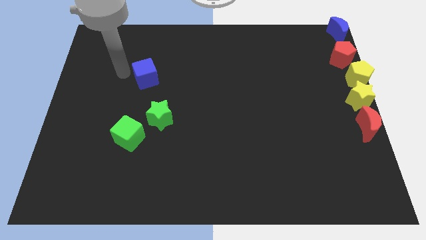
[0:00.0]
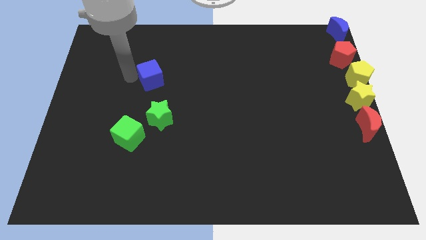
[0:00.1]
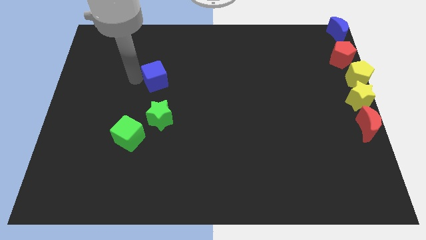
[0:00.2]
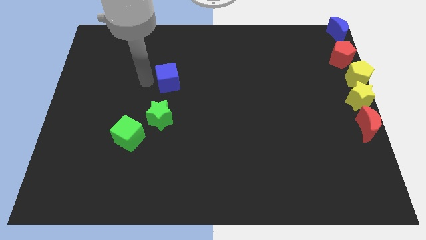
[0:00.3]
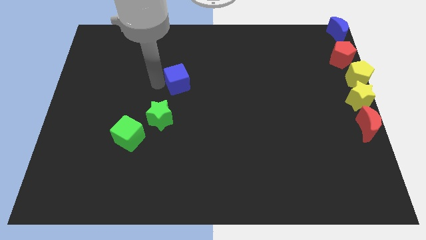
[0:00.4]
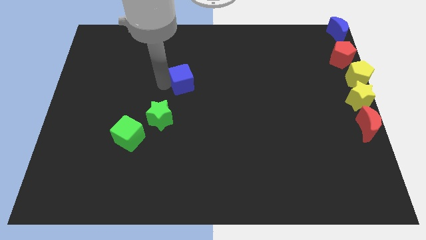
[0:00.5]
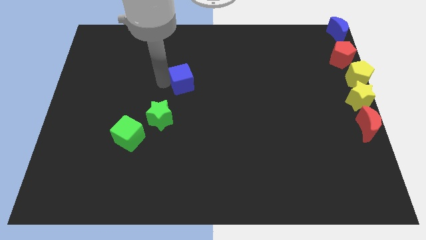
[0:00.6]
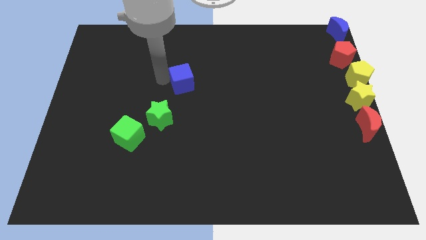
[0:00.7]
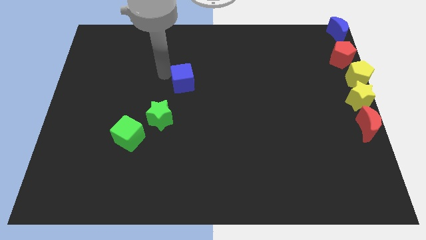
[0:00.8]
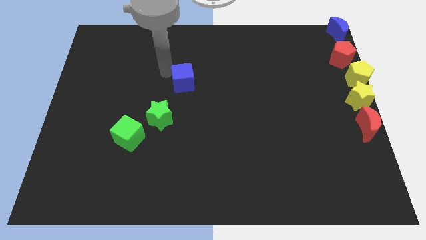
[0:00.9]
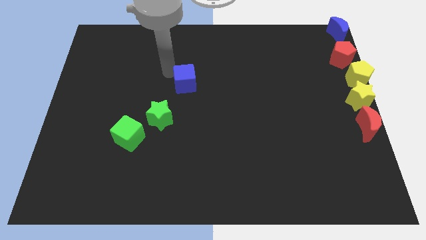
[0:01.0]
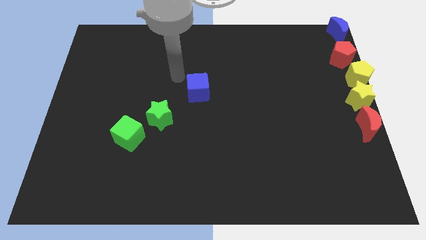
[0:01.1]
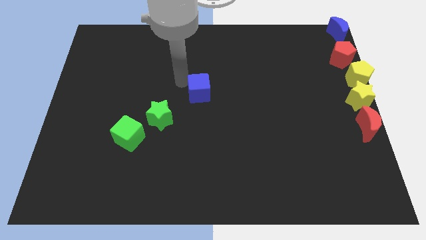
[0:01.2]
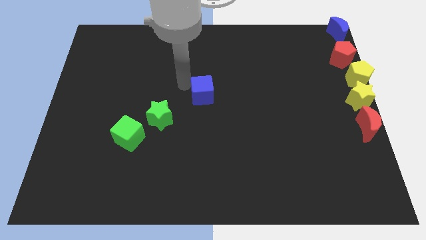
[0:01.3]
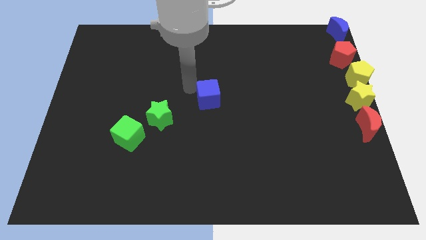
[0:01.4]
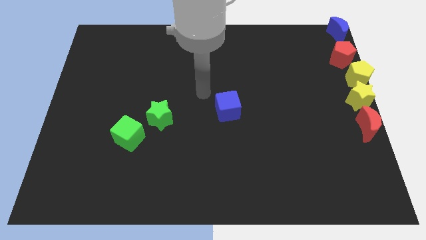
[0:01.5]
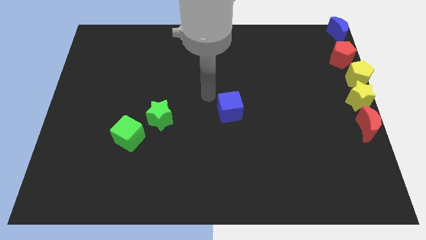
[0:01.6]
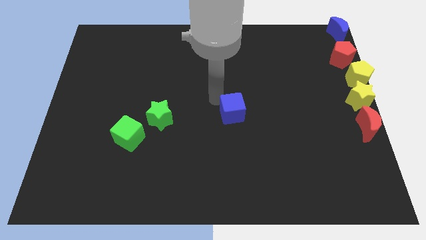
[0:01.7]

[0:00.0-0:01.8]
move the blue cube to the center of the board

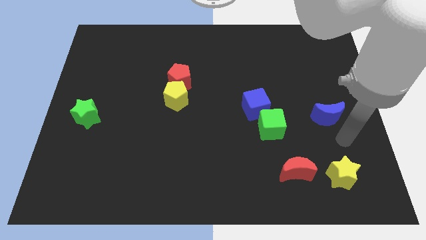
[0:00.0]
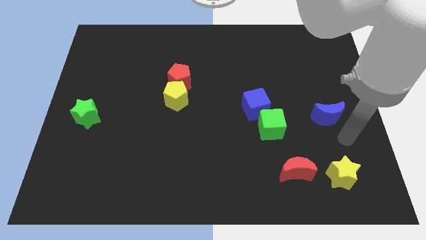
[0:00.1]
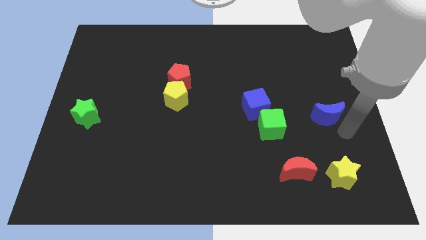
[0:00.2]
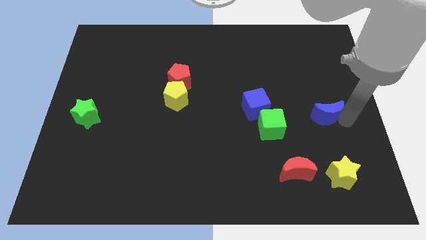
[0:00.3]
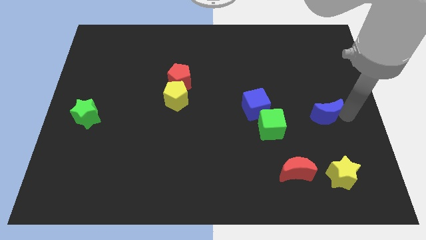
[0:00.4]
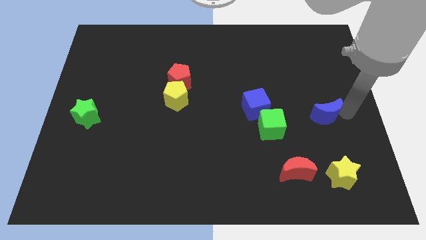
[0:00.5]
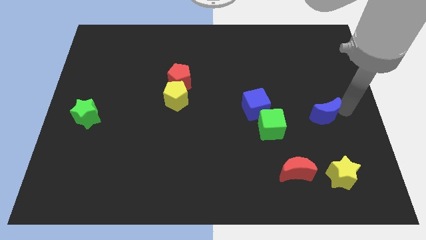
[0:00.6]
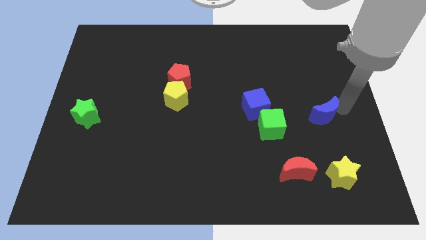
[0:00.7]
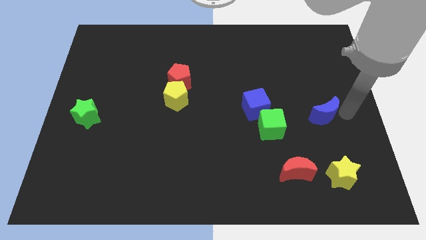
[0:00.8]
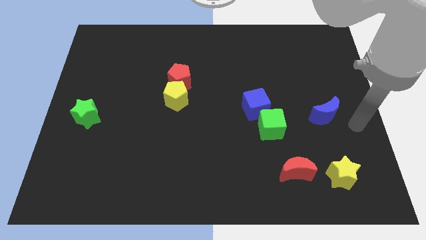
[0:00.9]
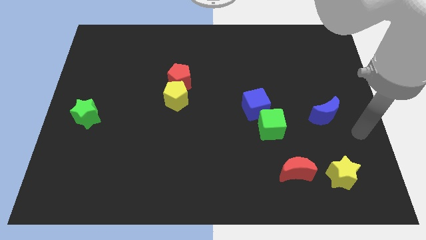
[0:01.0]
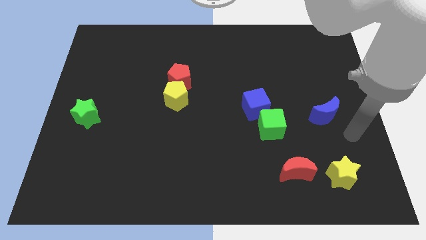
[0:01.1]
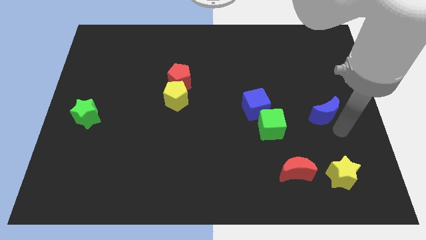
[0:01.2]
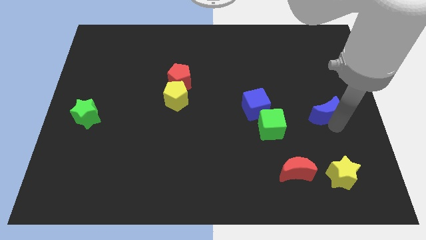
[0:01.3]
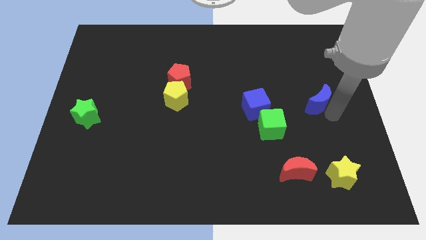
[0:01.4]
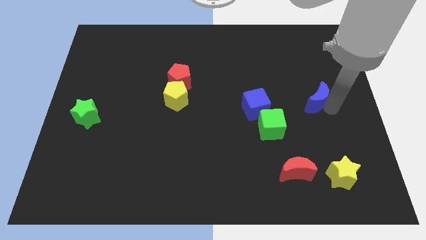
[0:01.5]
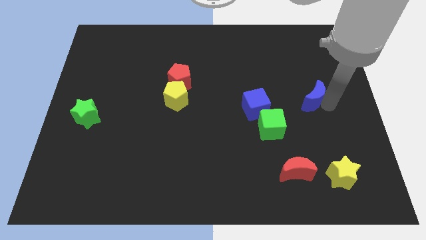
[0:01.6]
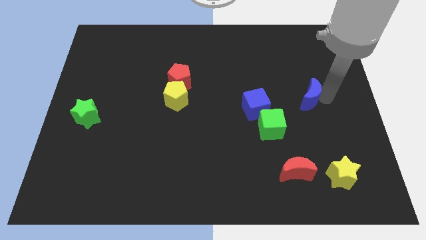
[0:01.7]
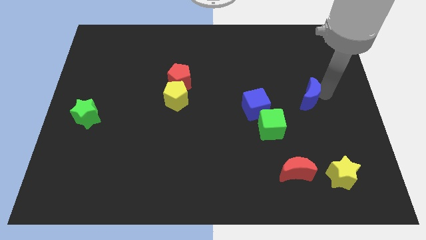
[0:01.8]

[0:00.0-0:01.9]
place the blue moon diagonally on the top right side of the green cube

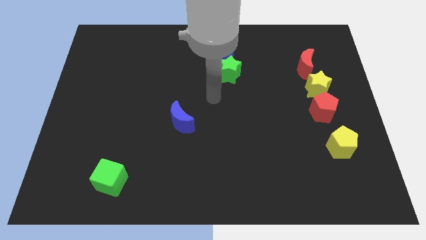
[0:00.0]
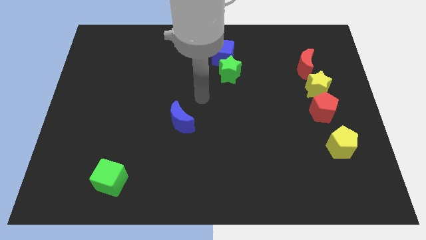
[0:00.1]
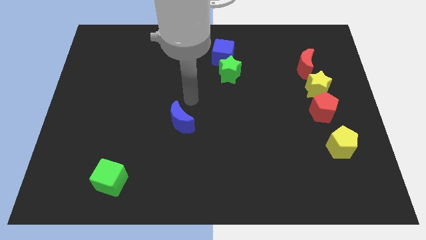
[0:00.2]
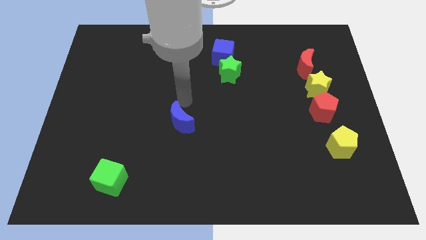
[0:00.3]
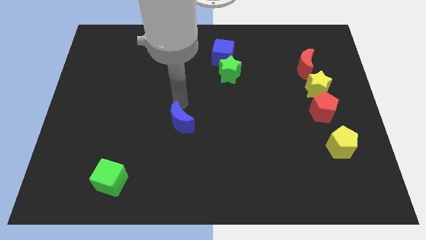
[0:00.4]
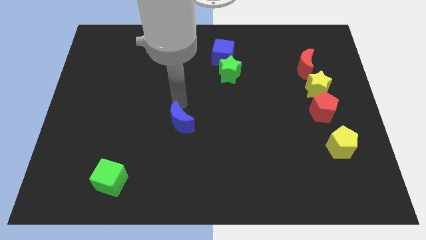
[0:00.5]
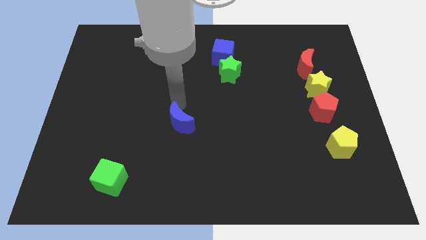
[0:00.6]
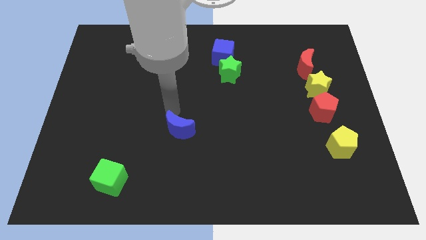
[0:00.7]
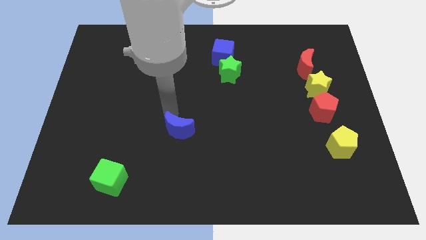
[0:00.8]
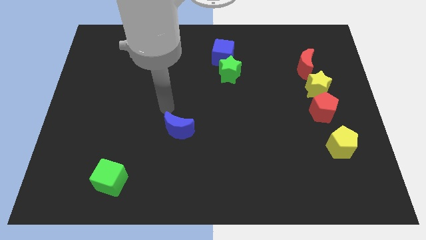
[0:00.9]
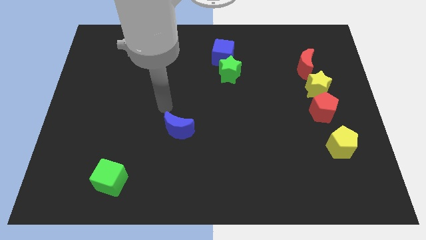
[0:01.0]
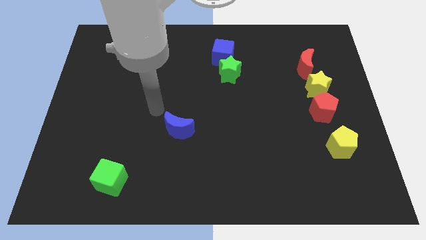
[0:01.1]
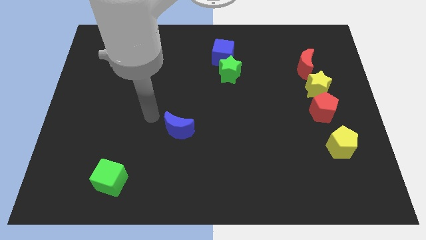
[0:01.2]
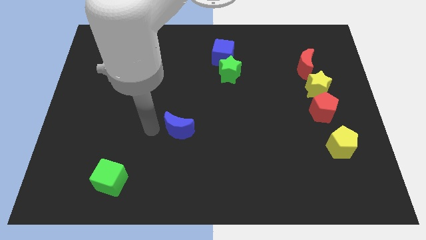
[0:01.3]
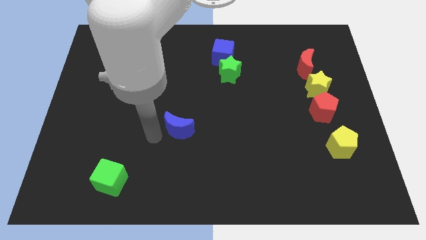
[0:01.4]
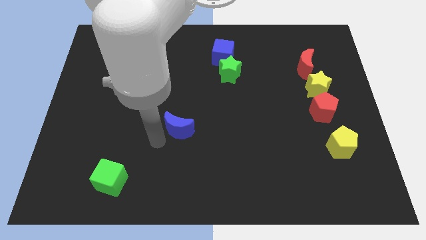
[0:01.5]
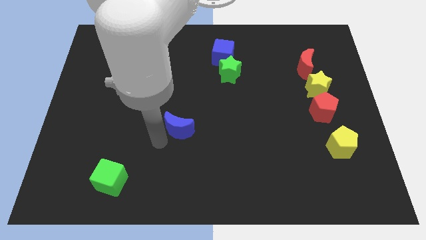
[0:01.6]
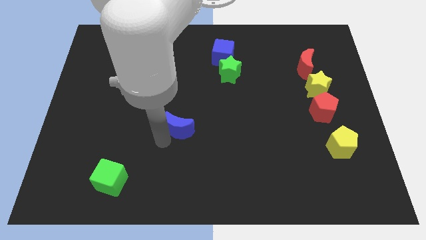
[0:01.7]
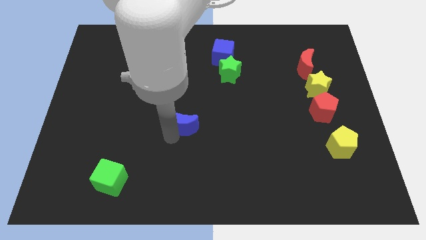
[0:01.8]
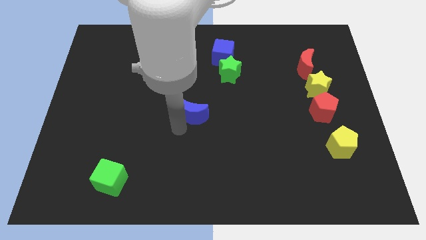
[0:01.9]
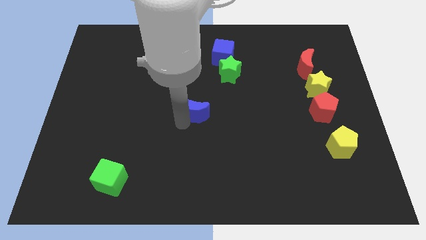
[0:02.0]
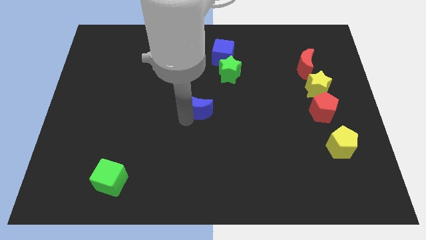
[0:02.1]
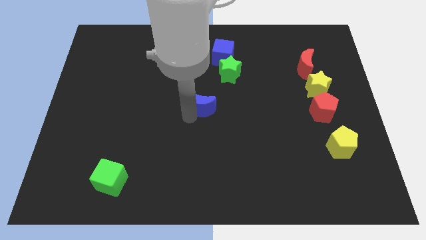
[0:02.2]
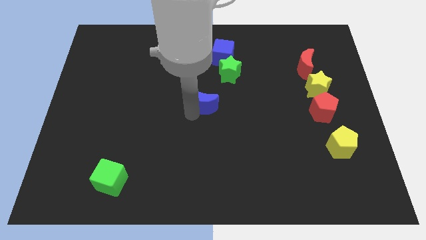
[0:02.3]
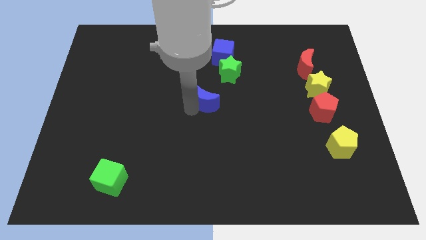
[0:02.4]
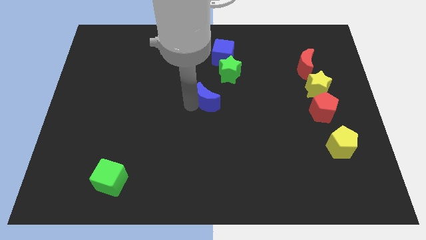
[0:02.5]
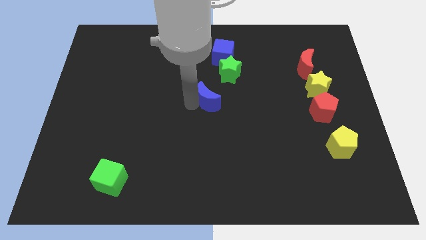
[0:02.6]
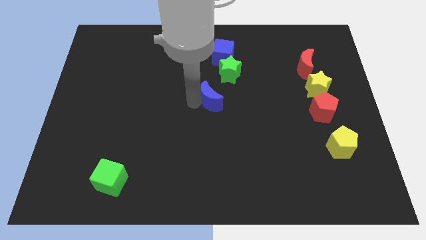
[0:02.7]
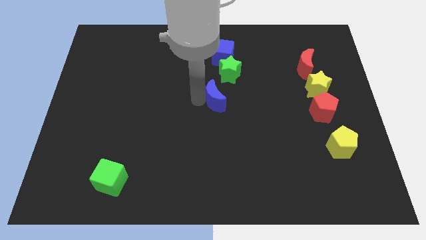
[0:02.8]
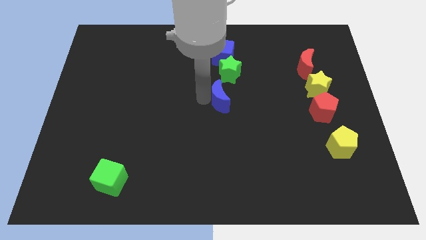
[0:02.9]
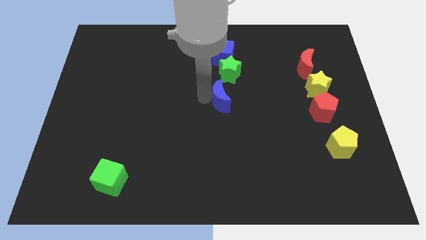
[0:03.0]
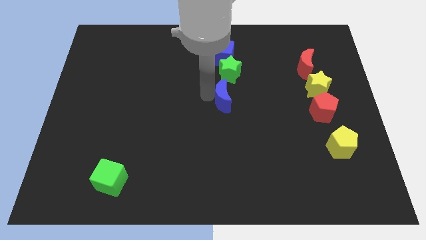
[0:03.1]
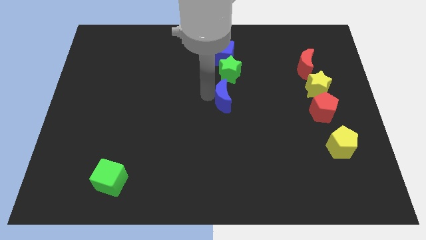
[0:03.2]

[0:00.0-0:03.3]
drag tthe blue moon towards the bottom side of the green star

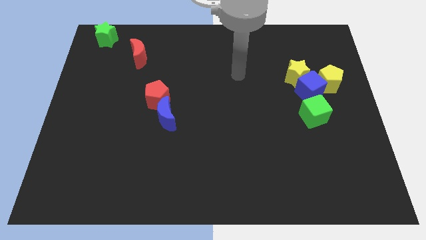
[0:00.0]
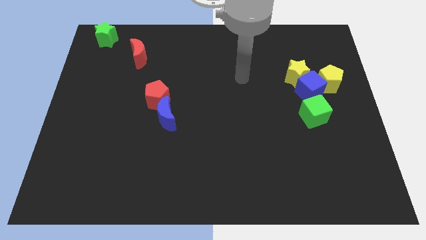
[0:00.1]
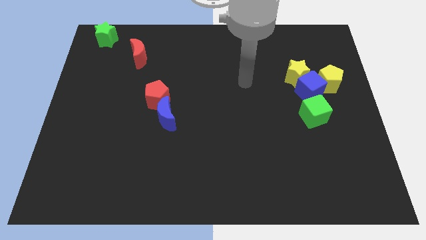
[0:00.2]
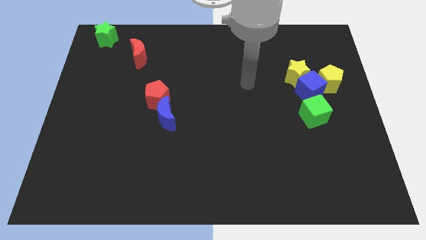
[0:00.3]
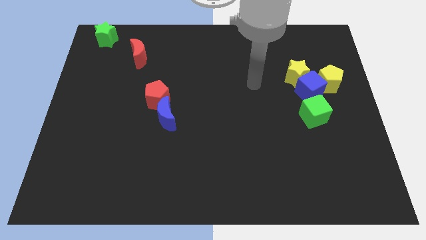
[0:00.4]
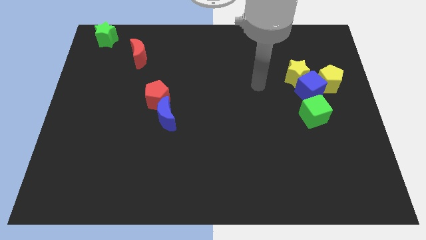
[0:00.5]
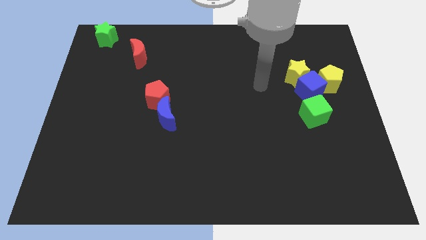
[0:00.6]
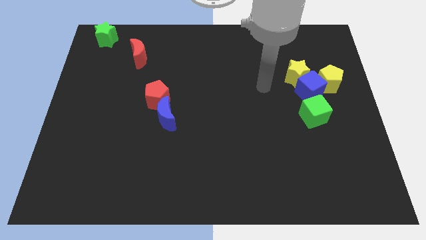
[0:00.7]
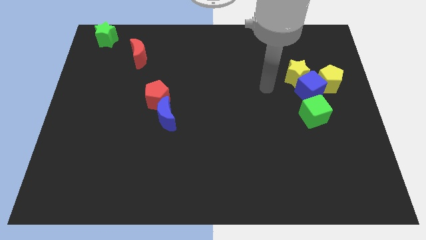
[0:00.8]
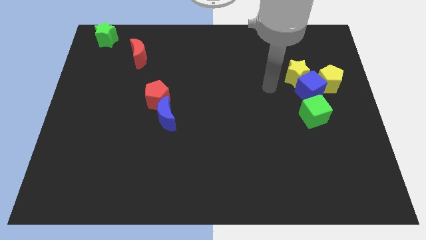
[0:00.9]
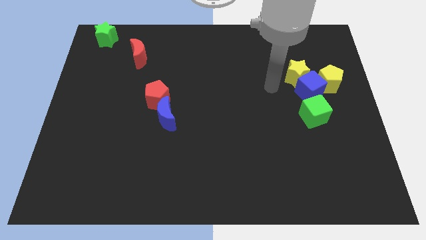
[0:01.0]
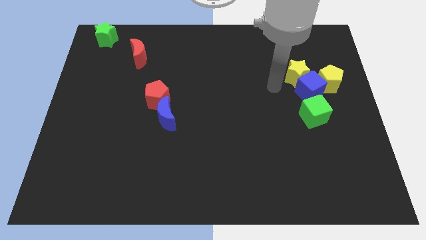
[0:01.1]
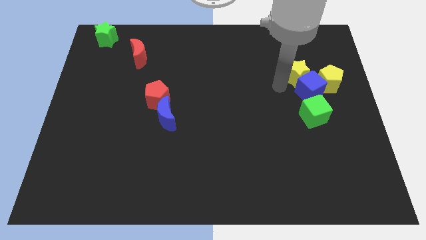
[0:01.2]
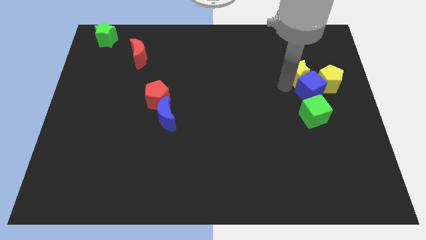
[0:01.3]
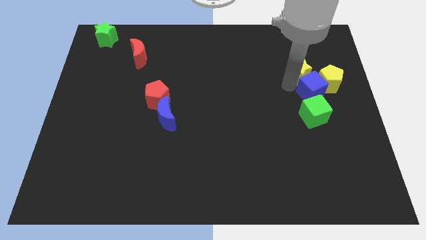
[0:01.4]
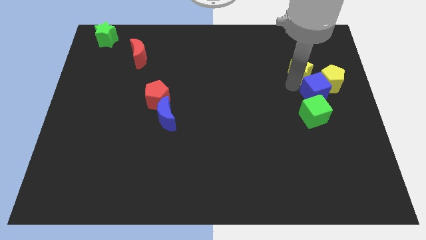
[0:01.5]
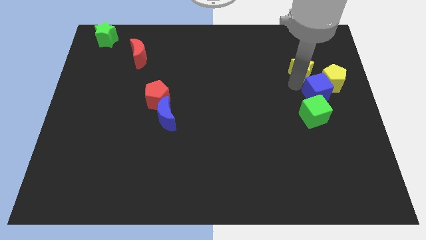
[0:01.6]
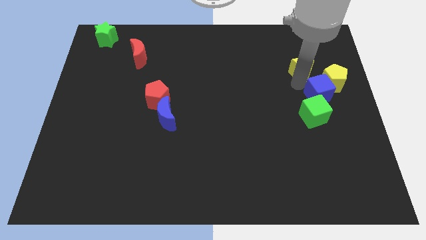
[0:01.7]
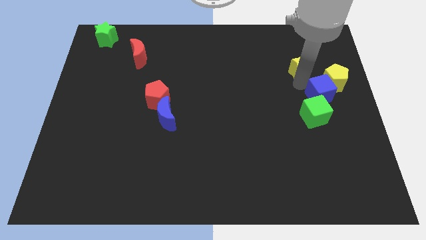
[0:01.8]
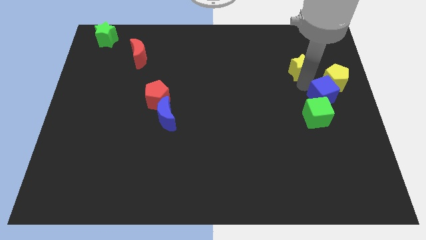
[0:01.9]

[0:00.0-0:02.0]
seperate blue cube and yellow star

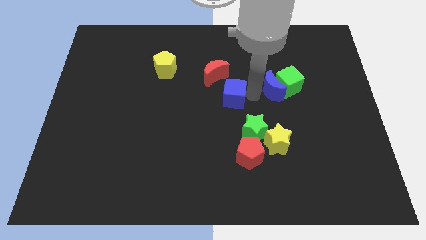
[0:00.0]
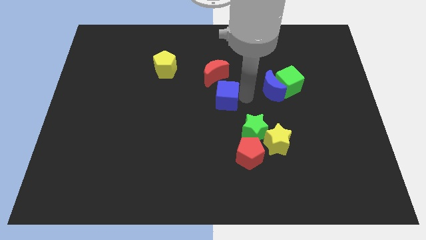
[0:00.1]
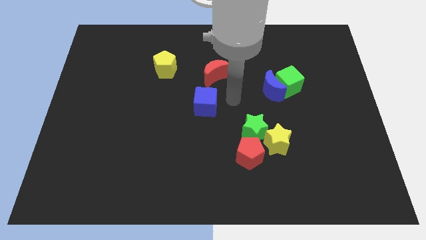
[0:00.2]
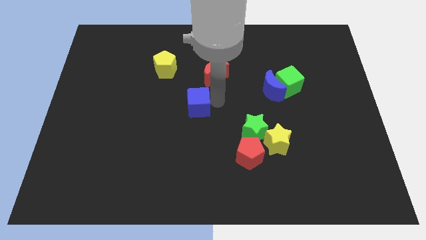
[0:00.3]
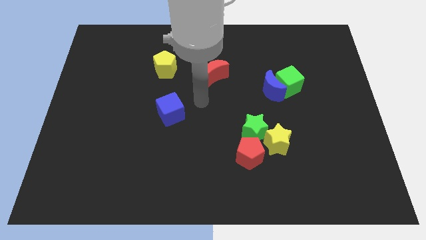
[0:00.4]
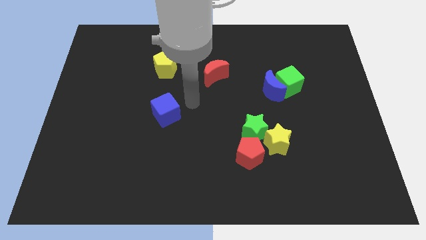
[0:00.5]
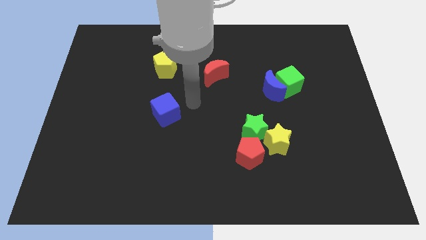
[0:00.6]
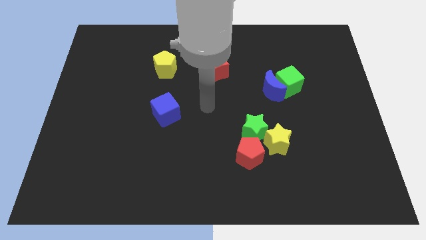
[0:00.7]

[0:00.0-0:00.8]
drag the blue cube vertically below the yellow pentagon
